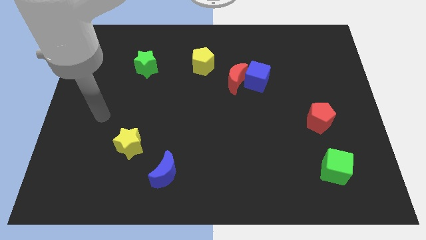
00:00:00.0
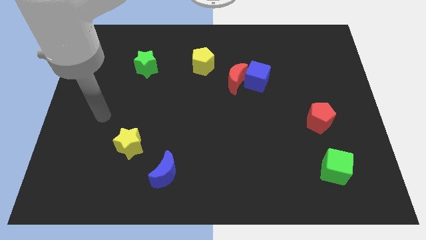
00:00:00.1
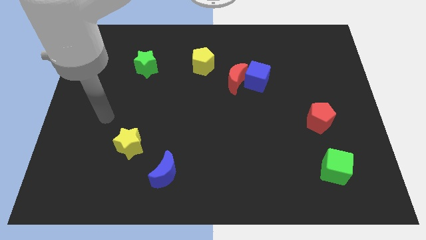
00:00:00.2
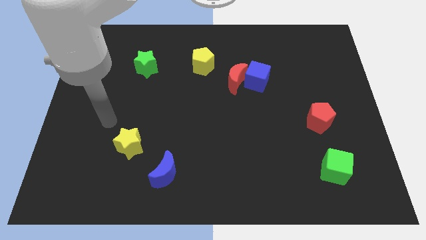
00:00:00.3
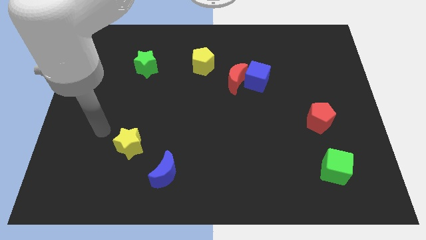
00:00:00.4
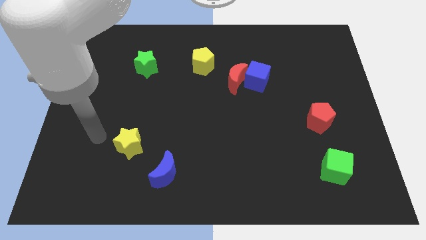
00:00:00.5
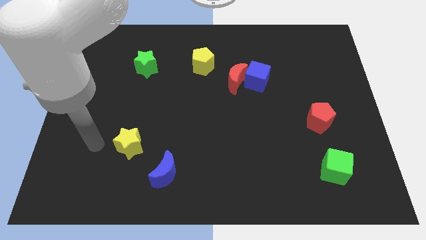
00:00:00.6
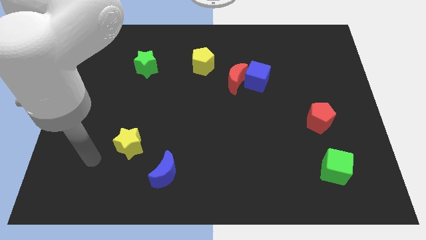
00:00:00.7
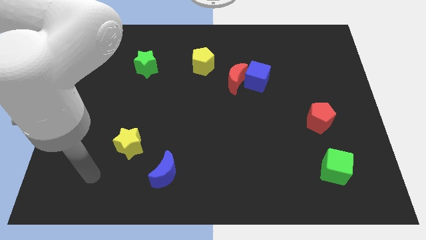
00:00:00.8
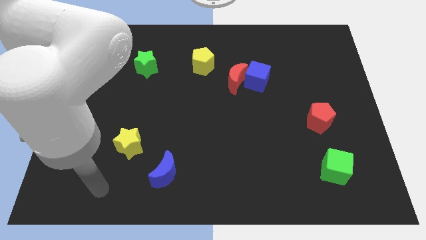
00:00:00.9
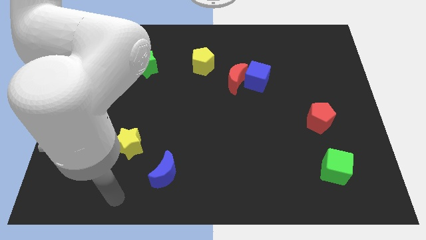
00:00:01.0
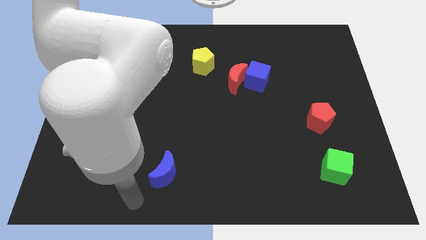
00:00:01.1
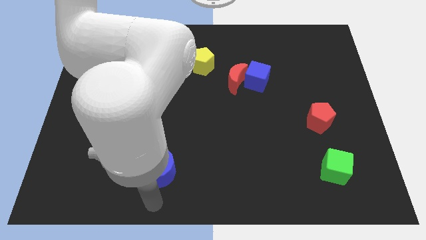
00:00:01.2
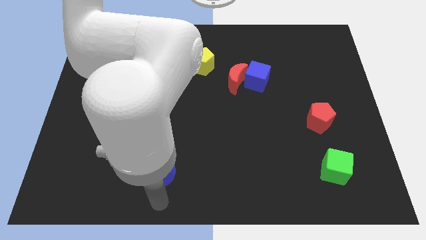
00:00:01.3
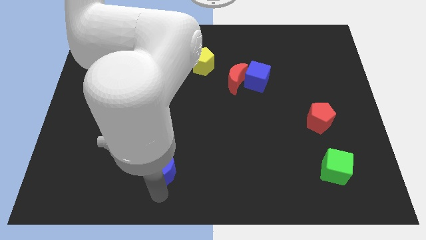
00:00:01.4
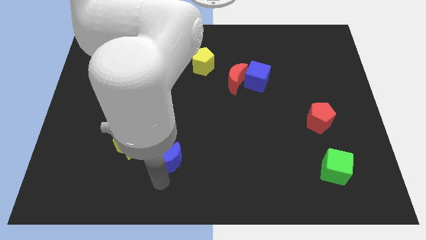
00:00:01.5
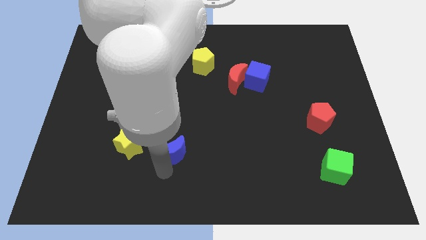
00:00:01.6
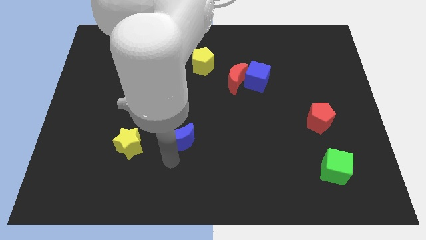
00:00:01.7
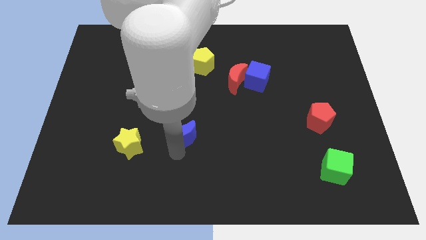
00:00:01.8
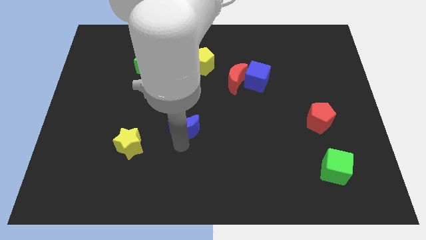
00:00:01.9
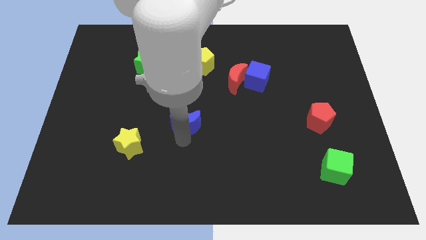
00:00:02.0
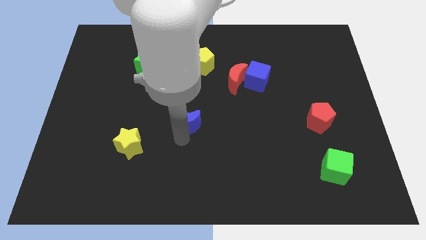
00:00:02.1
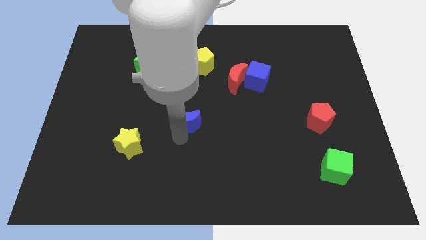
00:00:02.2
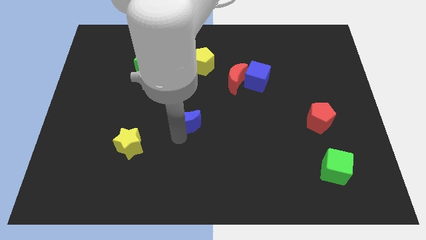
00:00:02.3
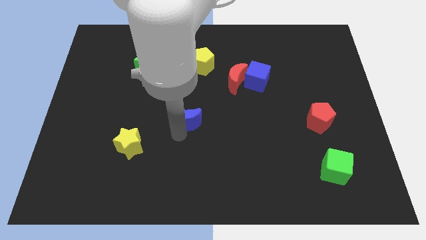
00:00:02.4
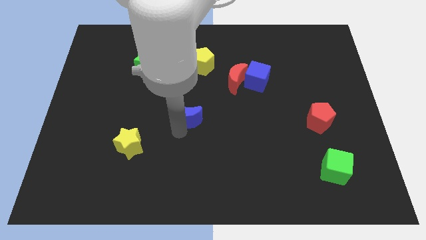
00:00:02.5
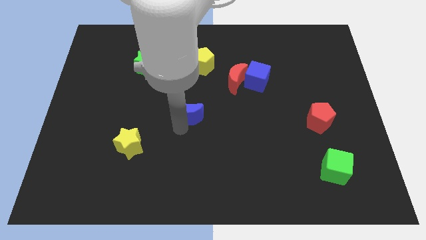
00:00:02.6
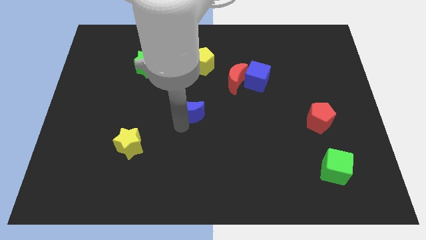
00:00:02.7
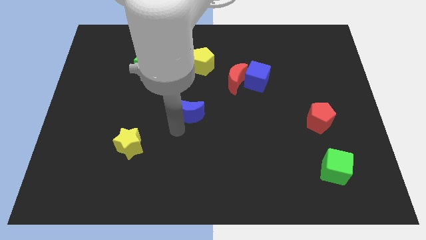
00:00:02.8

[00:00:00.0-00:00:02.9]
move the blue moon slightly up

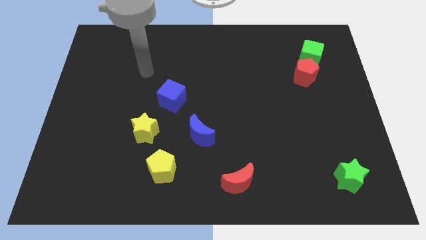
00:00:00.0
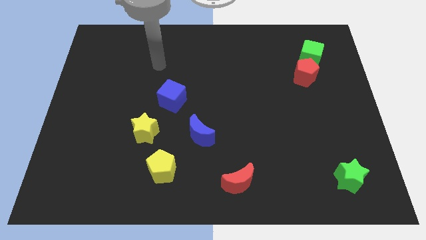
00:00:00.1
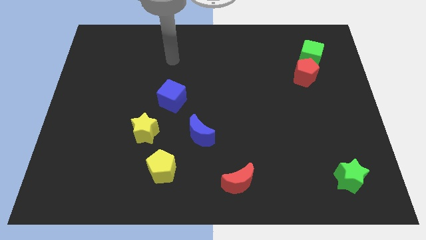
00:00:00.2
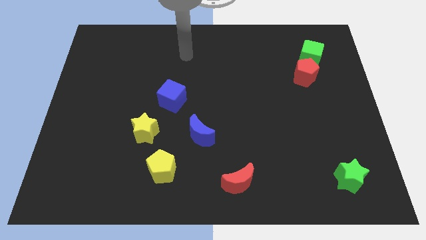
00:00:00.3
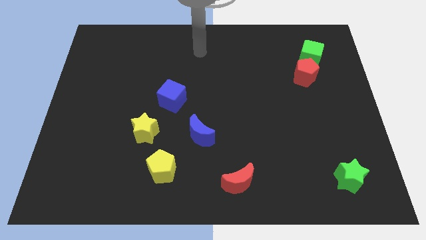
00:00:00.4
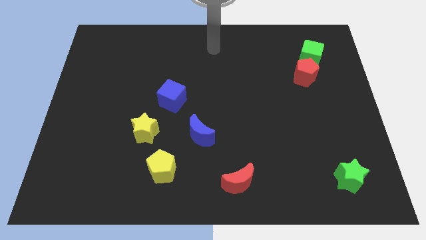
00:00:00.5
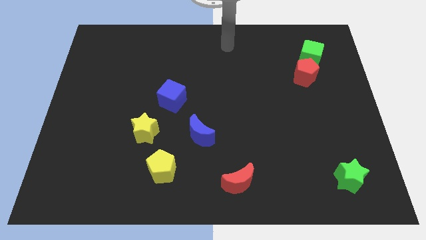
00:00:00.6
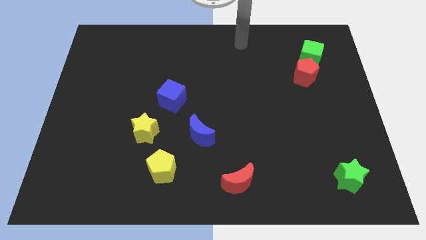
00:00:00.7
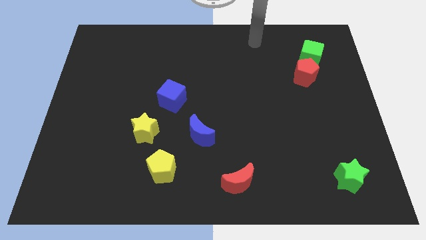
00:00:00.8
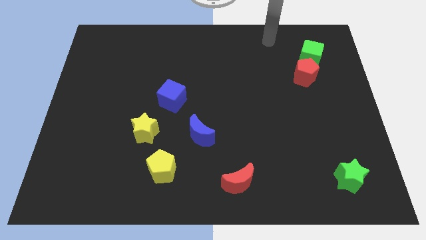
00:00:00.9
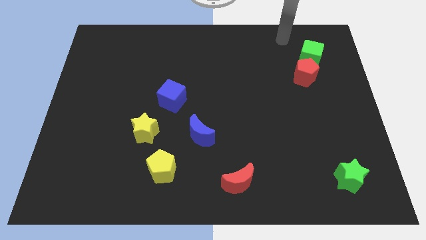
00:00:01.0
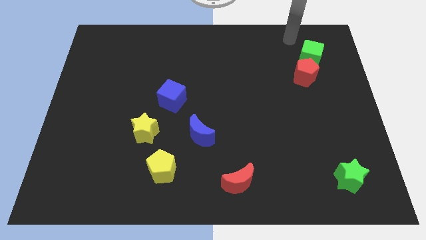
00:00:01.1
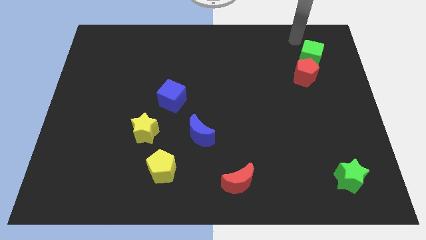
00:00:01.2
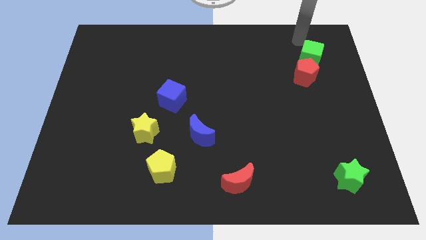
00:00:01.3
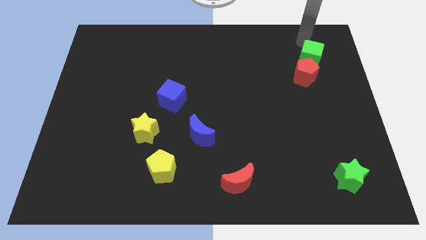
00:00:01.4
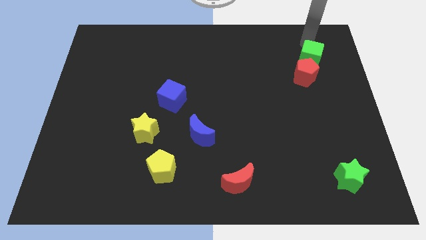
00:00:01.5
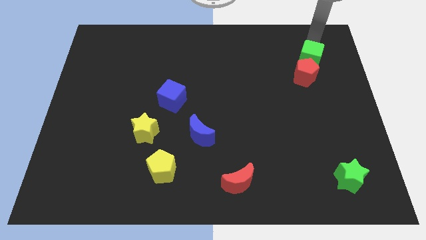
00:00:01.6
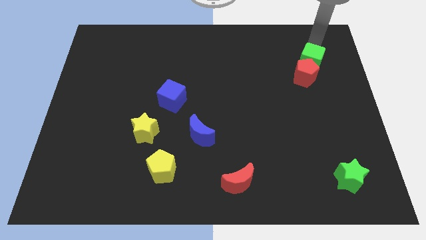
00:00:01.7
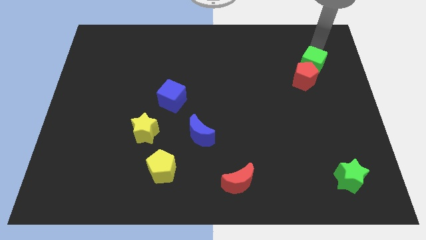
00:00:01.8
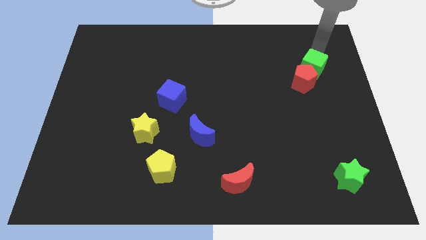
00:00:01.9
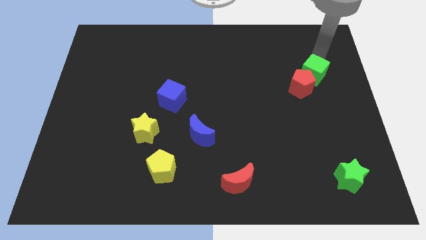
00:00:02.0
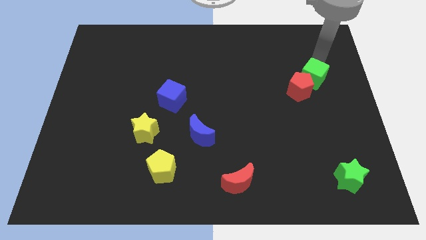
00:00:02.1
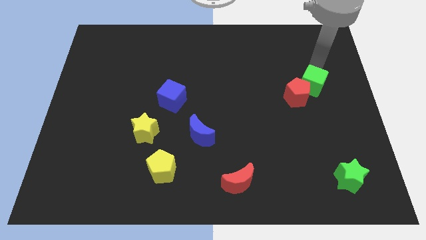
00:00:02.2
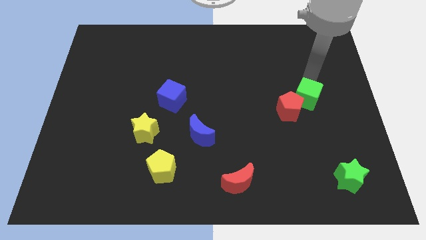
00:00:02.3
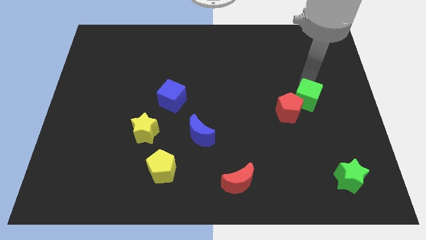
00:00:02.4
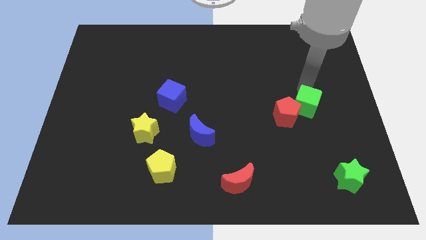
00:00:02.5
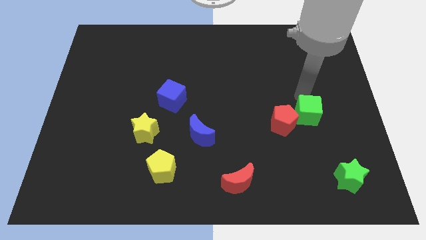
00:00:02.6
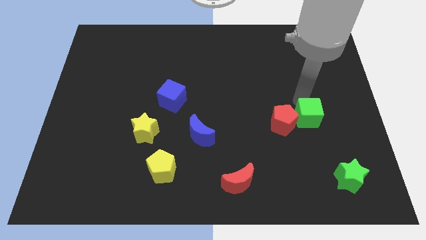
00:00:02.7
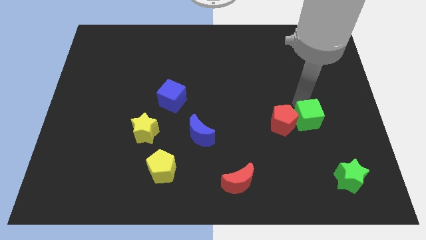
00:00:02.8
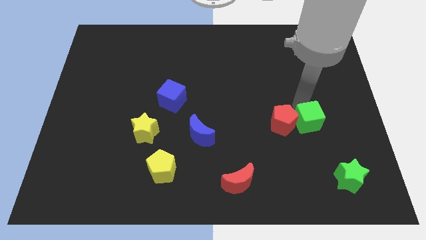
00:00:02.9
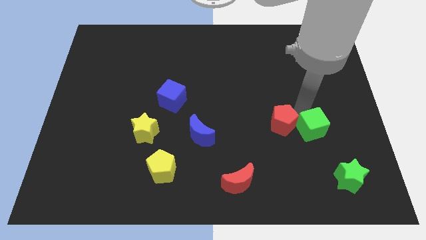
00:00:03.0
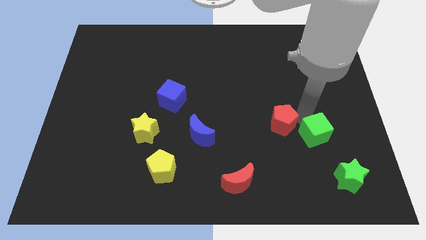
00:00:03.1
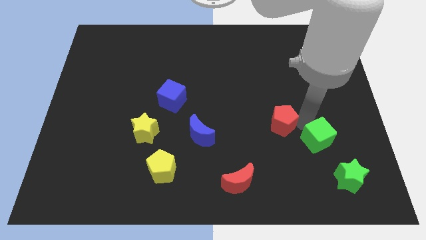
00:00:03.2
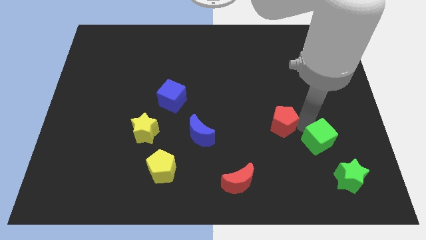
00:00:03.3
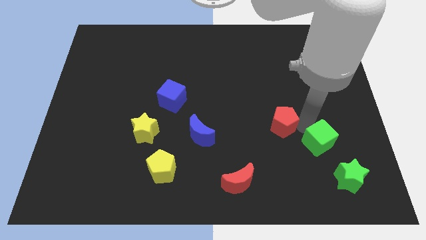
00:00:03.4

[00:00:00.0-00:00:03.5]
move green cube and red pentagon towards red crescent

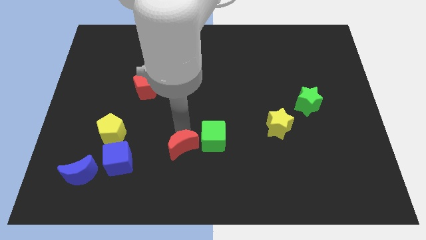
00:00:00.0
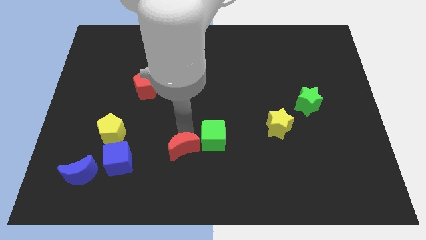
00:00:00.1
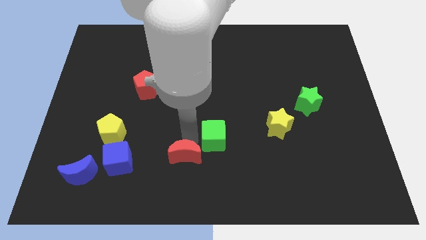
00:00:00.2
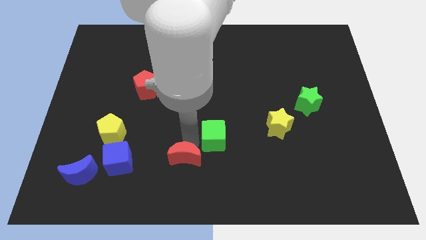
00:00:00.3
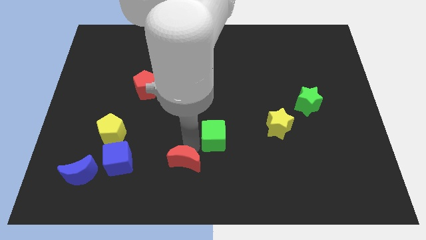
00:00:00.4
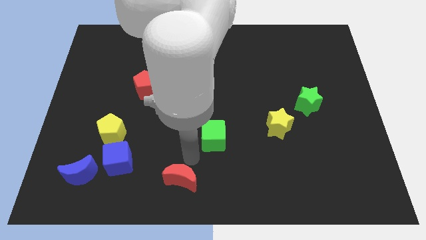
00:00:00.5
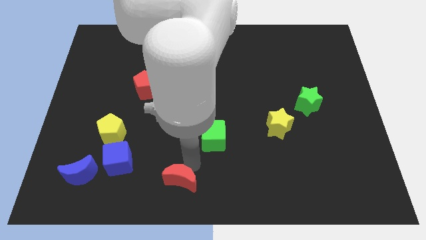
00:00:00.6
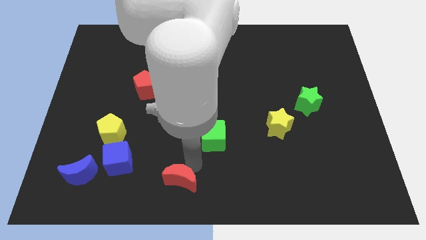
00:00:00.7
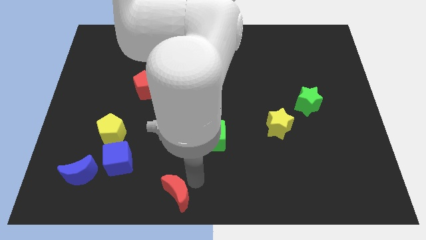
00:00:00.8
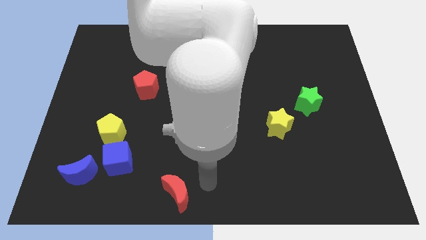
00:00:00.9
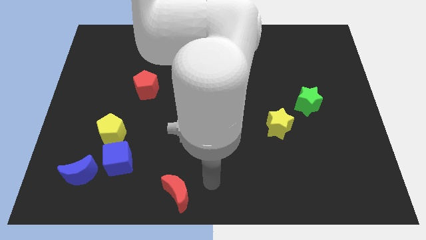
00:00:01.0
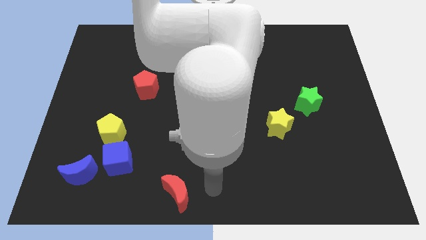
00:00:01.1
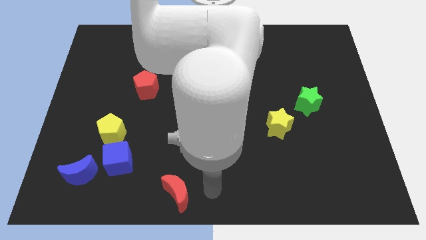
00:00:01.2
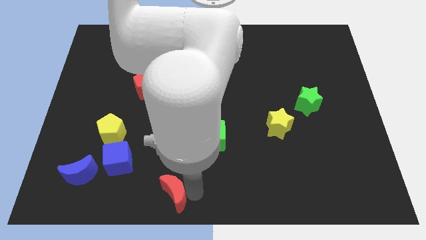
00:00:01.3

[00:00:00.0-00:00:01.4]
push the red crescent to the bottom

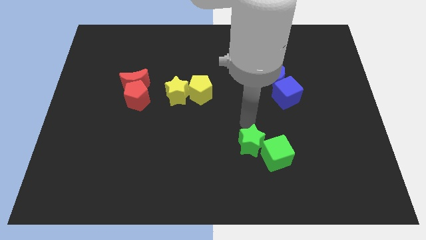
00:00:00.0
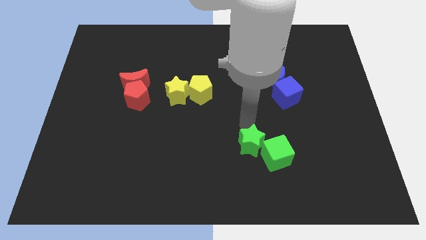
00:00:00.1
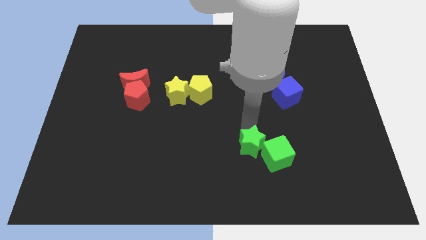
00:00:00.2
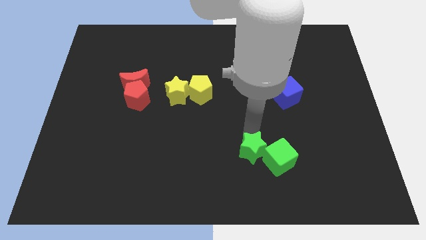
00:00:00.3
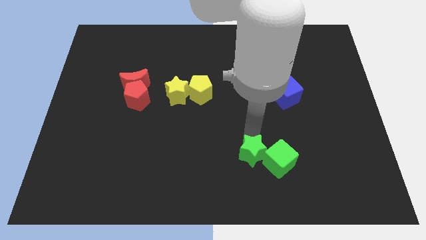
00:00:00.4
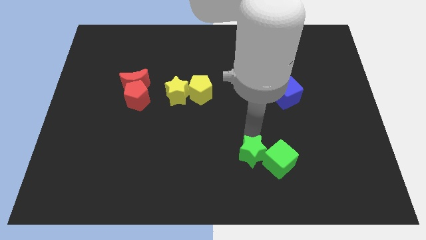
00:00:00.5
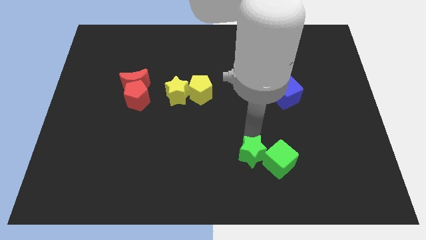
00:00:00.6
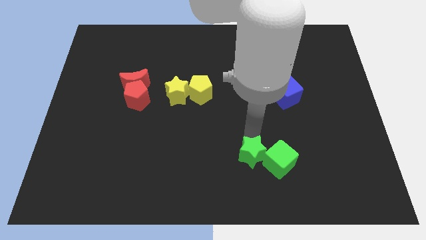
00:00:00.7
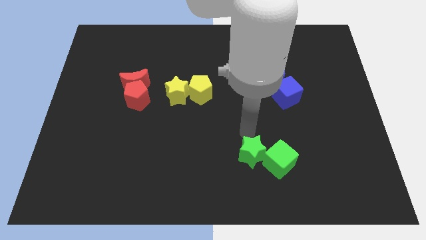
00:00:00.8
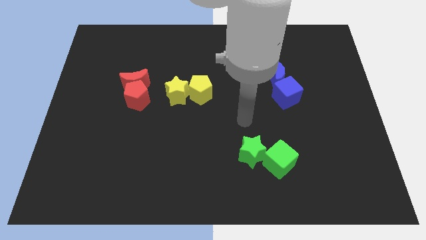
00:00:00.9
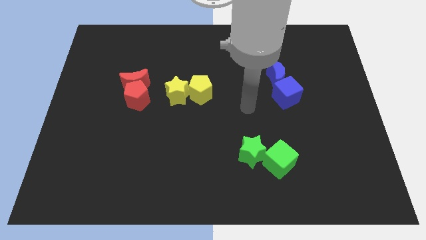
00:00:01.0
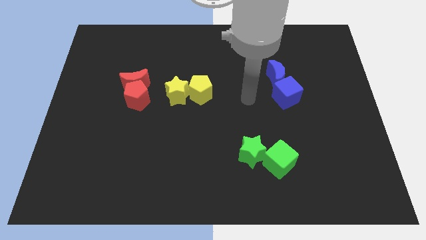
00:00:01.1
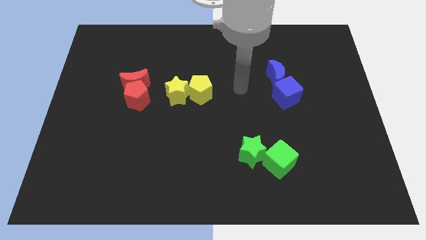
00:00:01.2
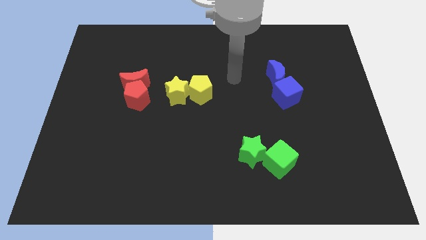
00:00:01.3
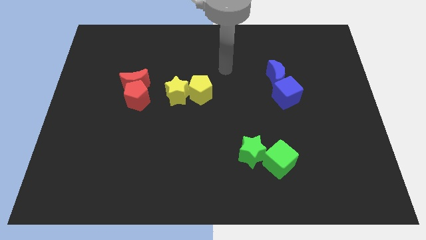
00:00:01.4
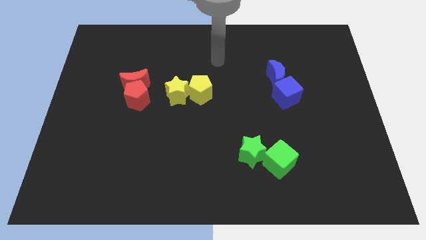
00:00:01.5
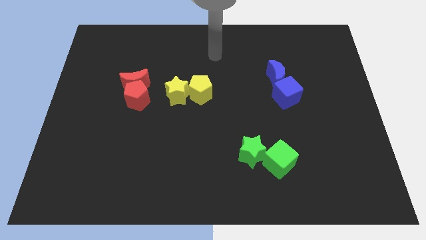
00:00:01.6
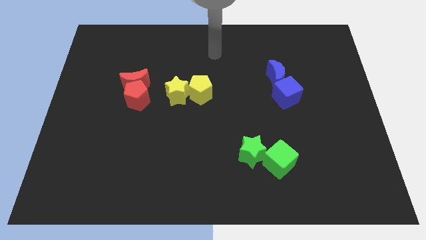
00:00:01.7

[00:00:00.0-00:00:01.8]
move your arm away from the blocks
